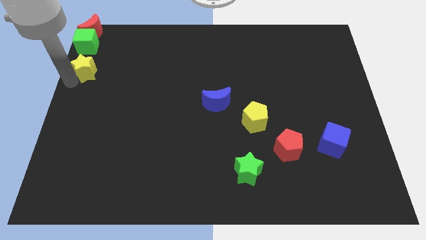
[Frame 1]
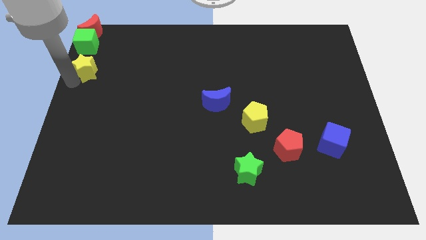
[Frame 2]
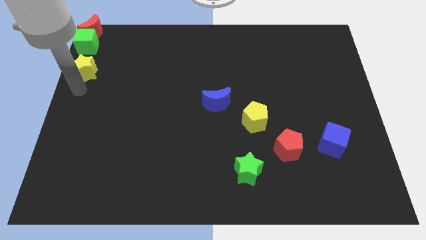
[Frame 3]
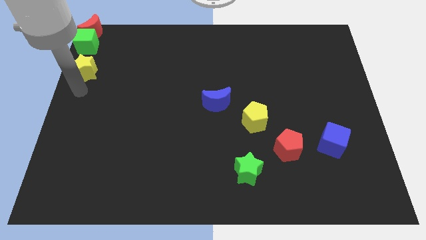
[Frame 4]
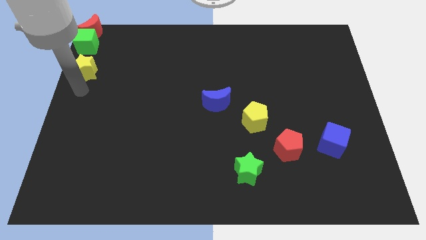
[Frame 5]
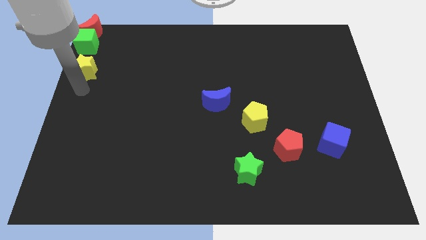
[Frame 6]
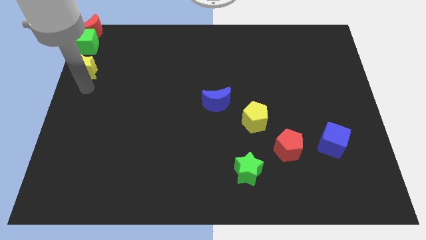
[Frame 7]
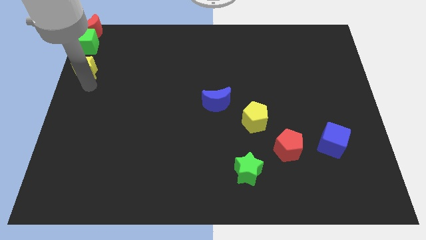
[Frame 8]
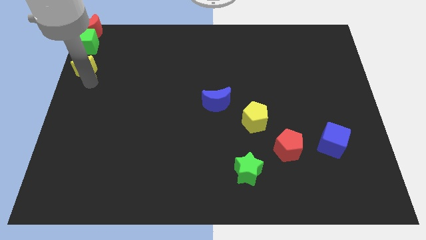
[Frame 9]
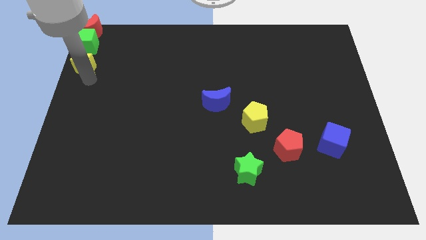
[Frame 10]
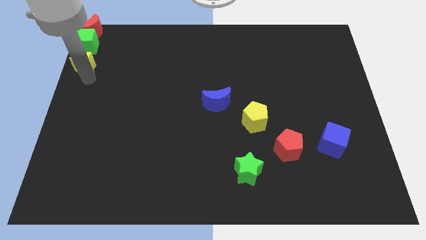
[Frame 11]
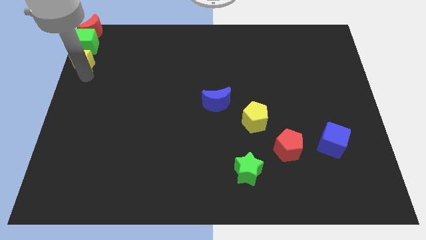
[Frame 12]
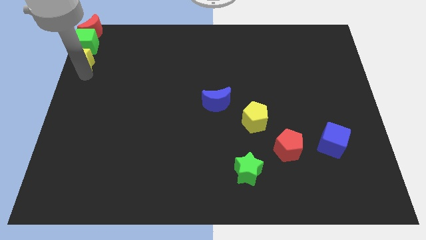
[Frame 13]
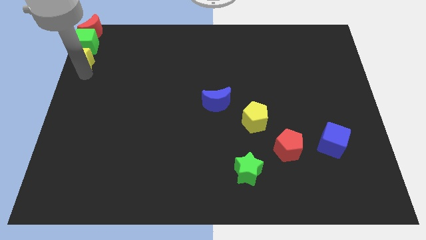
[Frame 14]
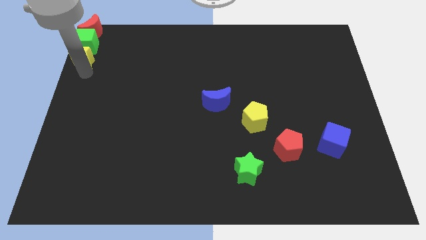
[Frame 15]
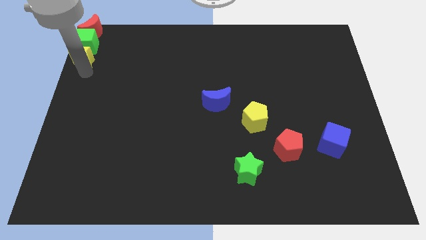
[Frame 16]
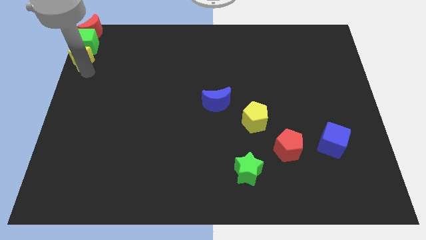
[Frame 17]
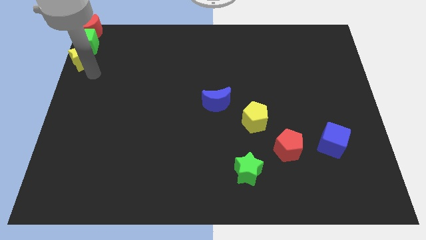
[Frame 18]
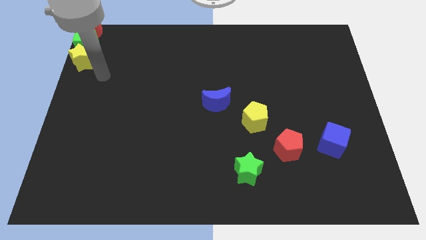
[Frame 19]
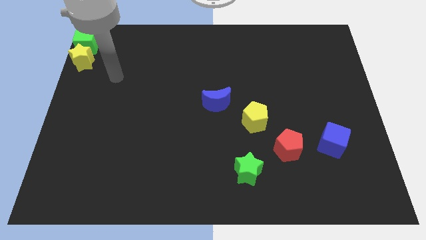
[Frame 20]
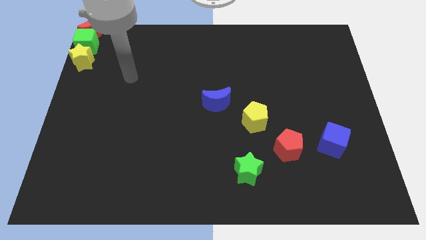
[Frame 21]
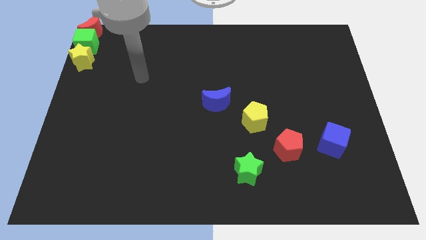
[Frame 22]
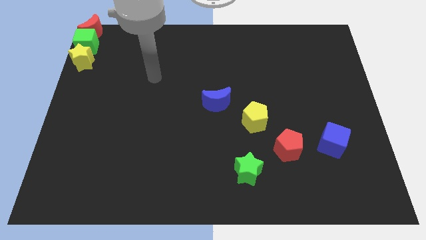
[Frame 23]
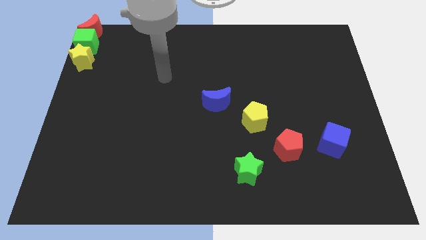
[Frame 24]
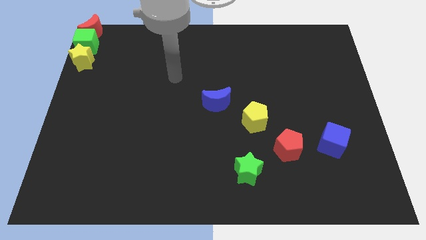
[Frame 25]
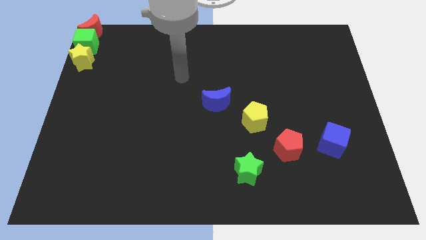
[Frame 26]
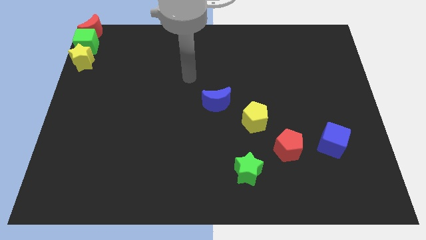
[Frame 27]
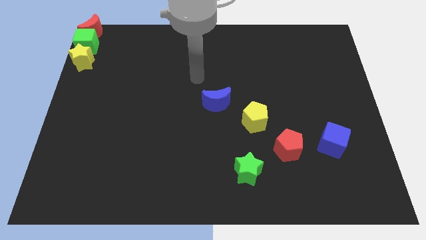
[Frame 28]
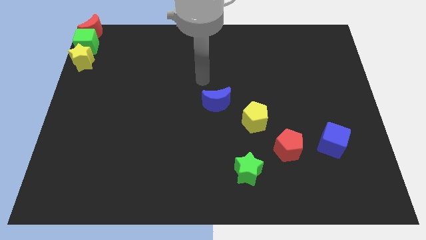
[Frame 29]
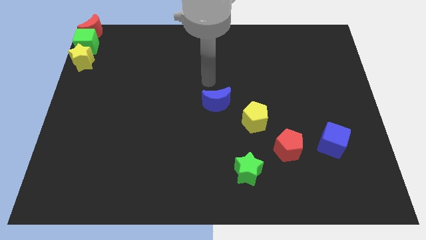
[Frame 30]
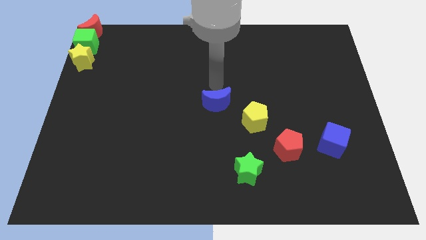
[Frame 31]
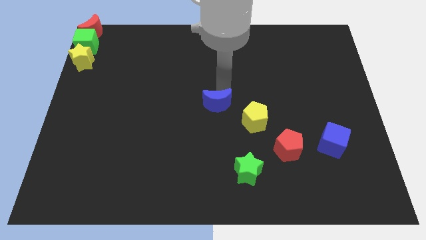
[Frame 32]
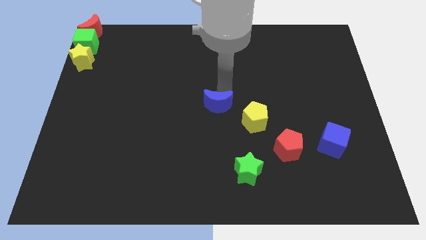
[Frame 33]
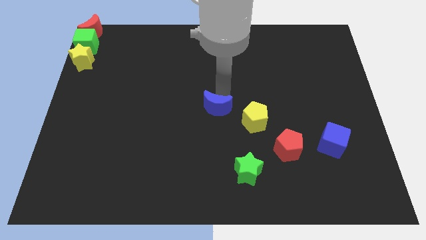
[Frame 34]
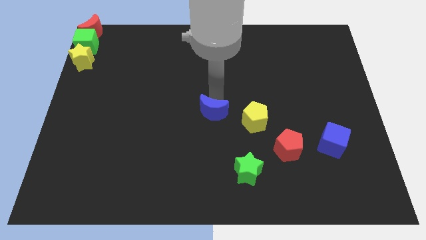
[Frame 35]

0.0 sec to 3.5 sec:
tap on the top of the blue moon

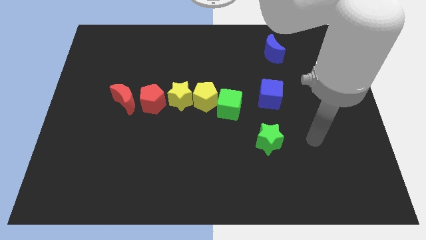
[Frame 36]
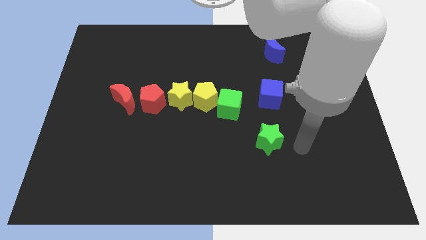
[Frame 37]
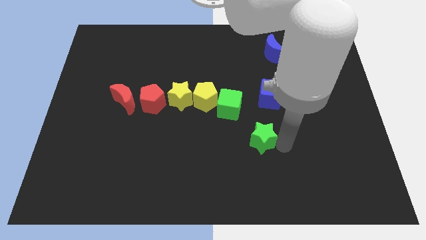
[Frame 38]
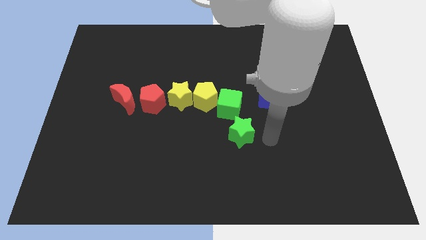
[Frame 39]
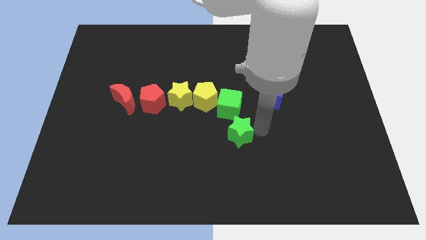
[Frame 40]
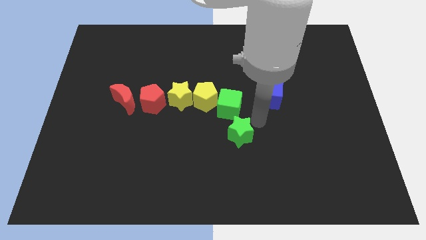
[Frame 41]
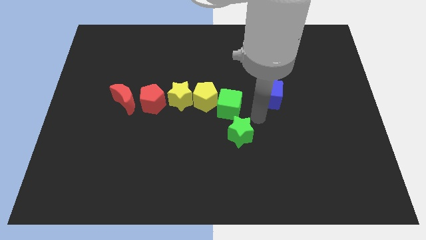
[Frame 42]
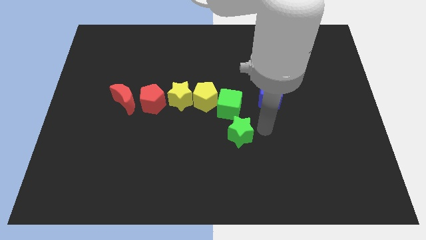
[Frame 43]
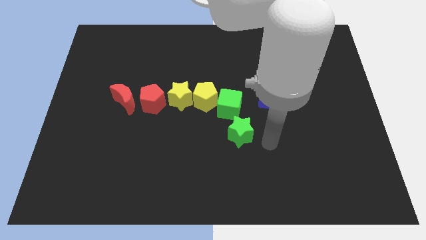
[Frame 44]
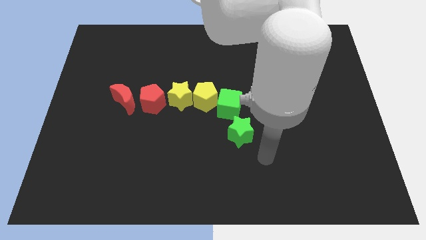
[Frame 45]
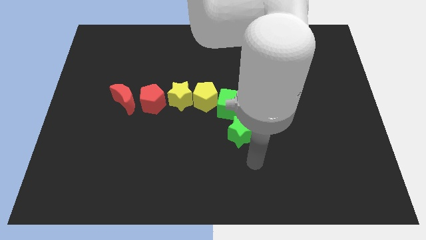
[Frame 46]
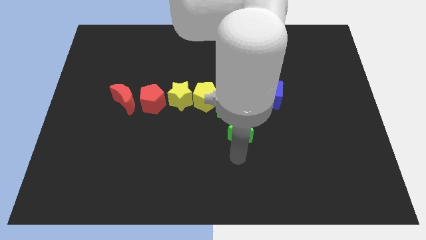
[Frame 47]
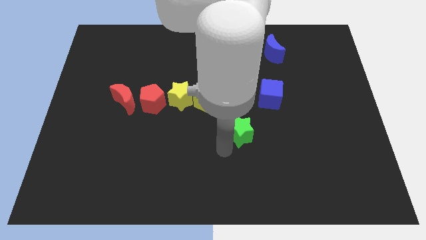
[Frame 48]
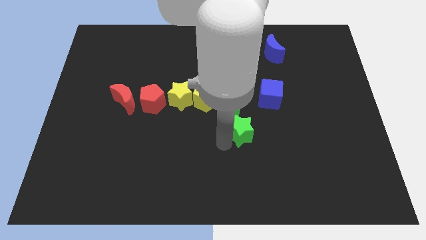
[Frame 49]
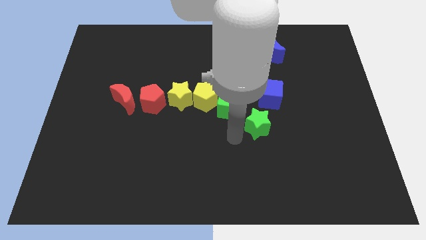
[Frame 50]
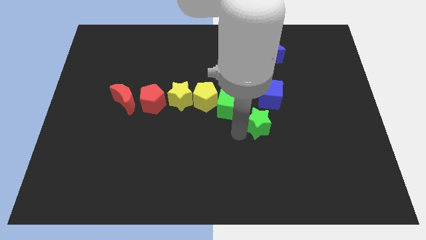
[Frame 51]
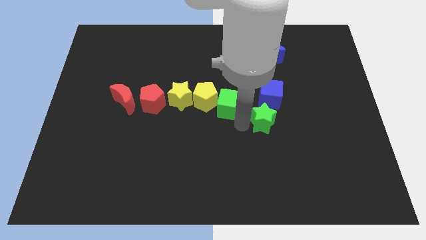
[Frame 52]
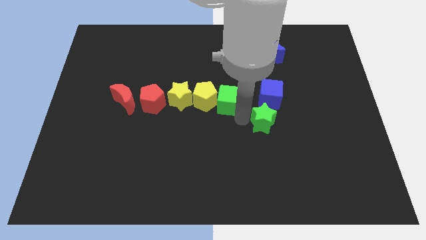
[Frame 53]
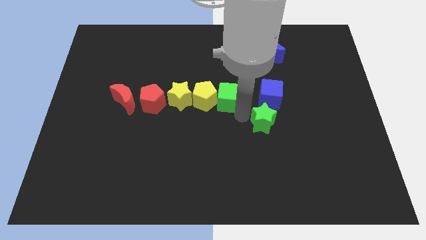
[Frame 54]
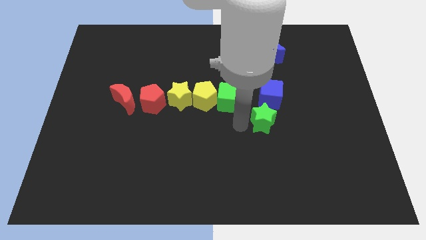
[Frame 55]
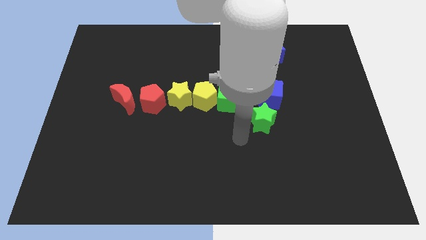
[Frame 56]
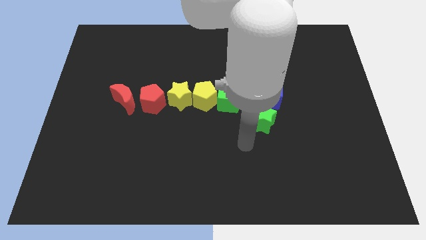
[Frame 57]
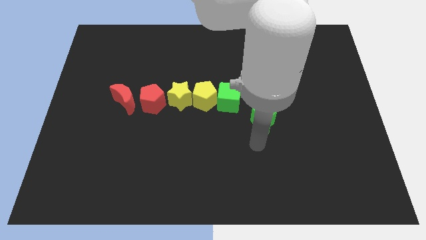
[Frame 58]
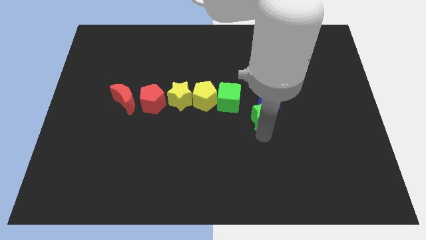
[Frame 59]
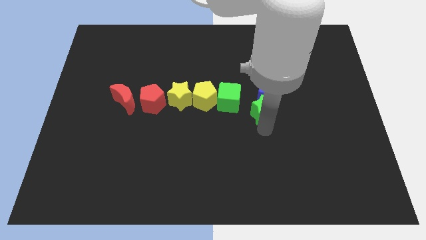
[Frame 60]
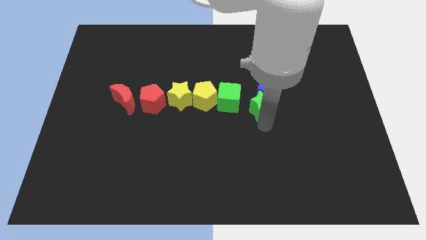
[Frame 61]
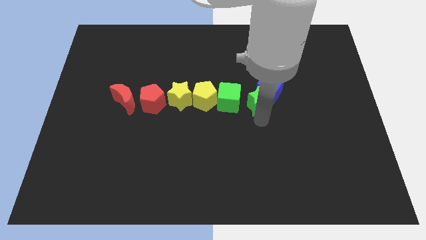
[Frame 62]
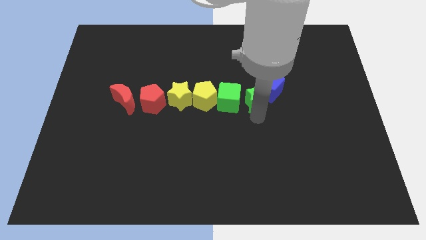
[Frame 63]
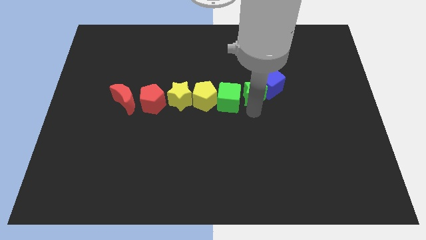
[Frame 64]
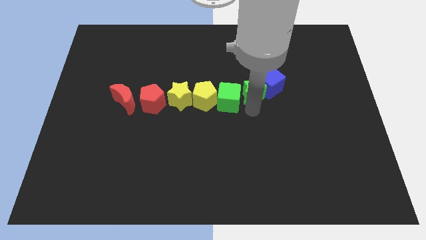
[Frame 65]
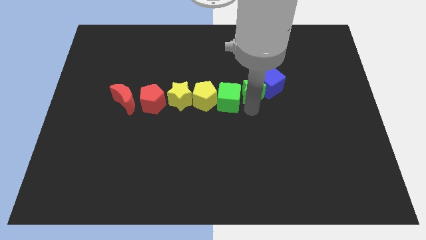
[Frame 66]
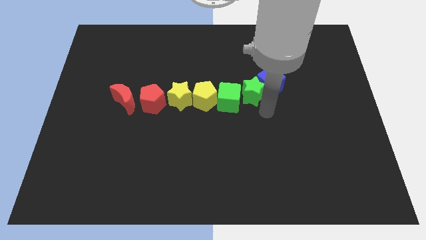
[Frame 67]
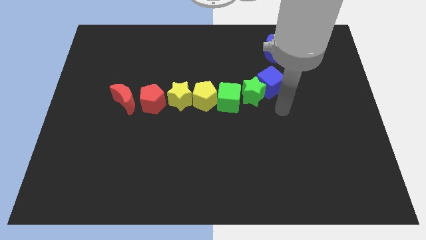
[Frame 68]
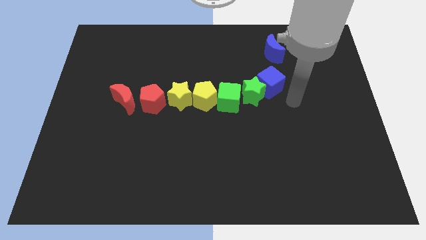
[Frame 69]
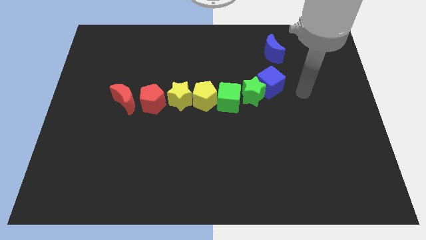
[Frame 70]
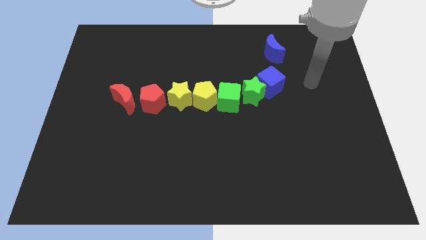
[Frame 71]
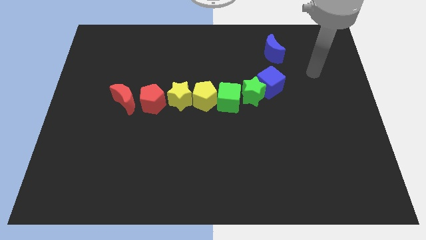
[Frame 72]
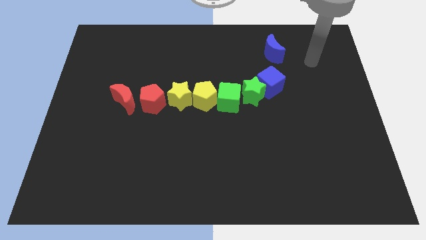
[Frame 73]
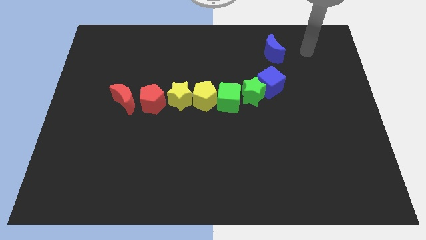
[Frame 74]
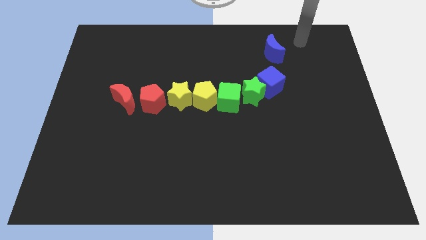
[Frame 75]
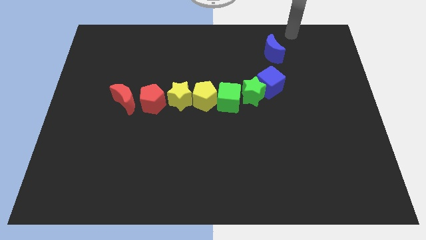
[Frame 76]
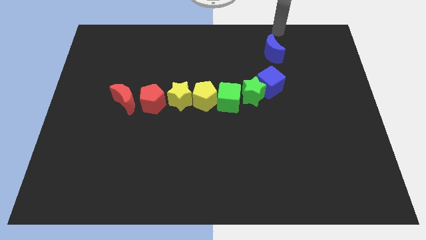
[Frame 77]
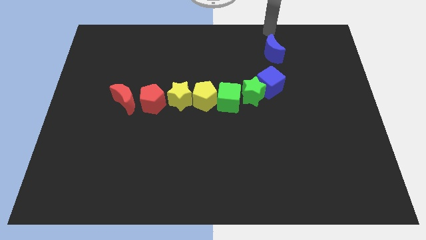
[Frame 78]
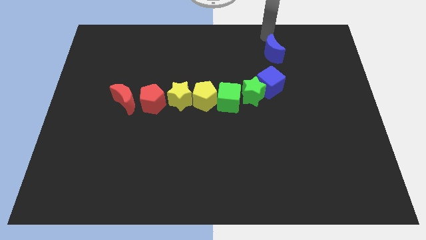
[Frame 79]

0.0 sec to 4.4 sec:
push the green star in between the green cube and the blue cube

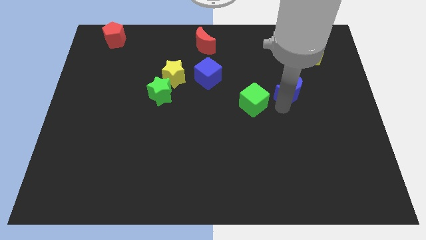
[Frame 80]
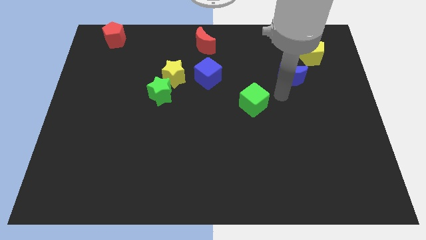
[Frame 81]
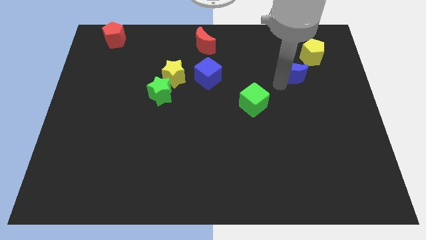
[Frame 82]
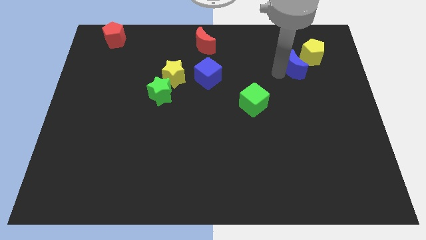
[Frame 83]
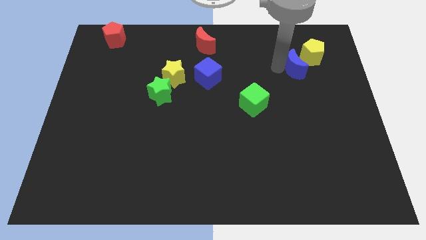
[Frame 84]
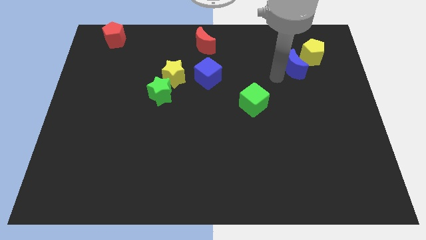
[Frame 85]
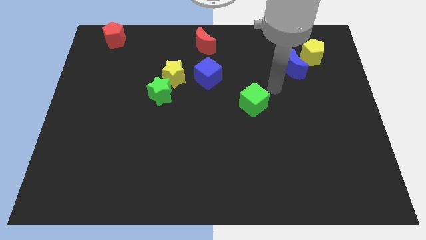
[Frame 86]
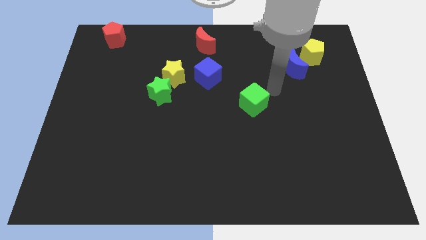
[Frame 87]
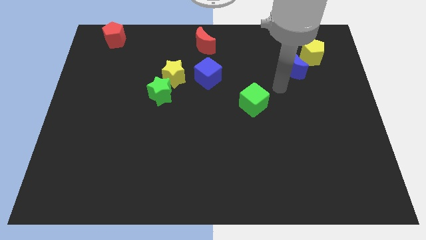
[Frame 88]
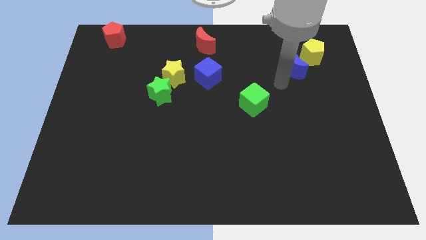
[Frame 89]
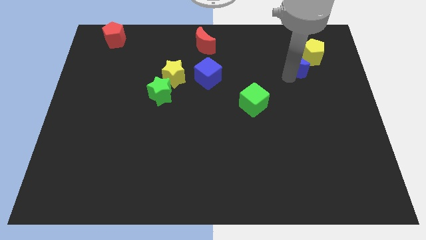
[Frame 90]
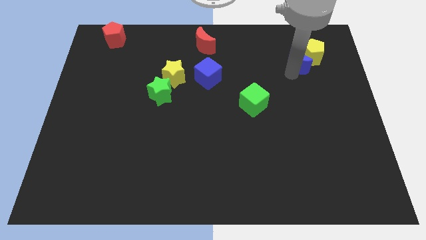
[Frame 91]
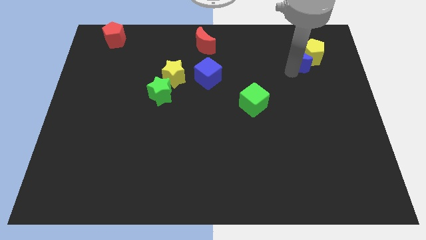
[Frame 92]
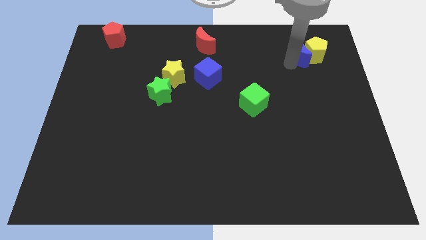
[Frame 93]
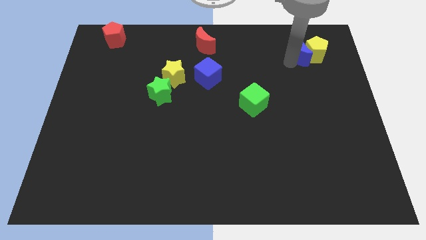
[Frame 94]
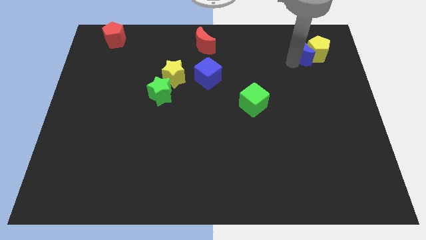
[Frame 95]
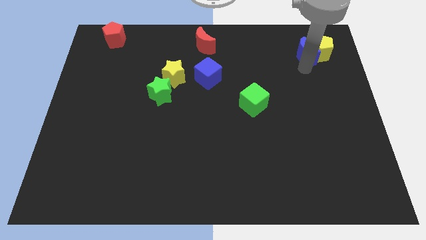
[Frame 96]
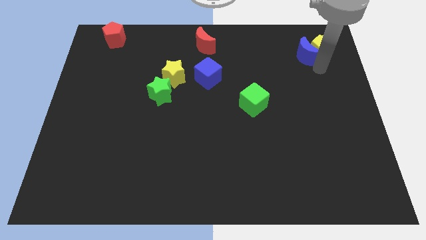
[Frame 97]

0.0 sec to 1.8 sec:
move the blue crescent into the yellow pentagon
